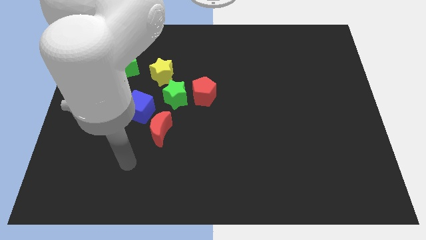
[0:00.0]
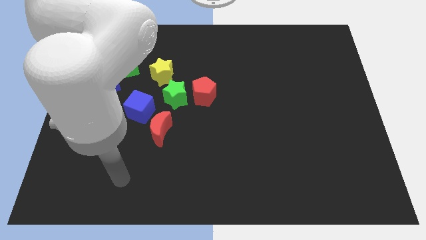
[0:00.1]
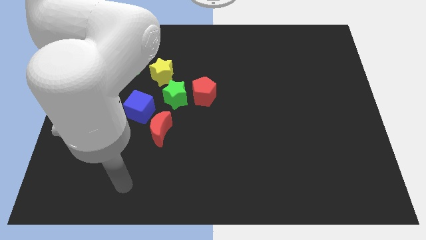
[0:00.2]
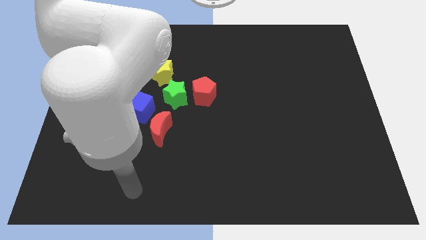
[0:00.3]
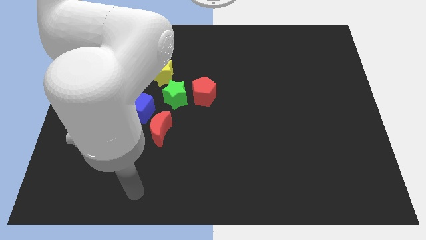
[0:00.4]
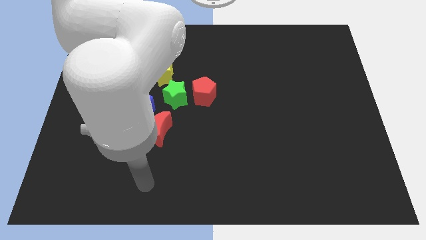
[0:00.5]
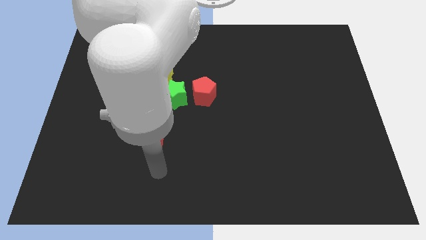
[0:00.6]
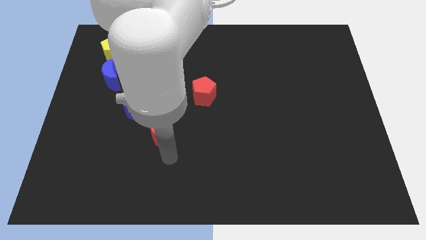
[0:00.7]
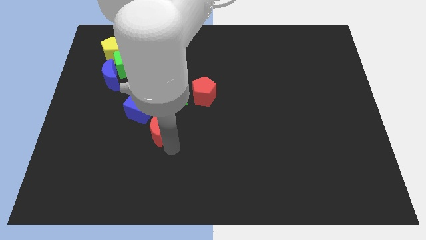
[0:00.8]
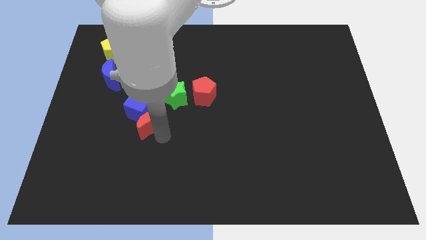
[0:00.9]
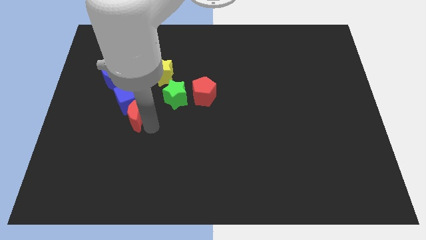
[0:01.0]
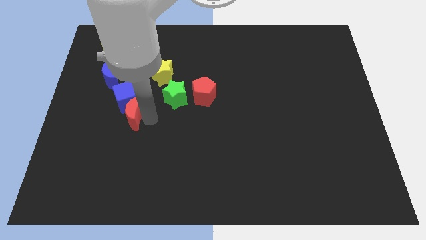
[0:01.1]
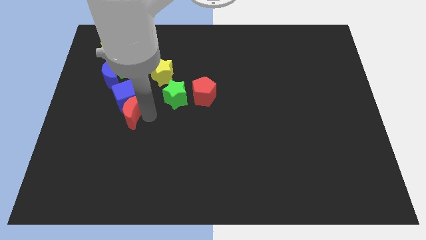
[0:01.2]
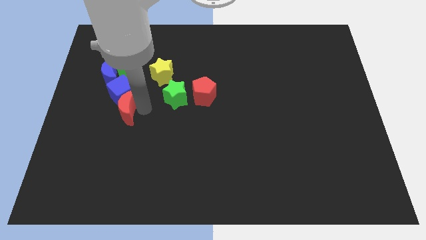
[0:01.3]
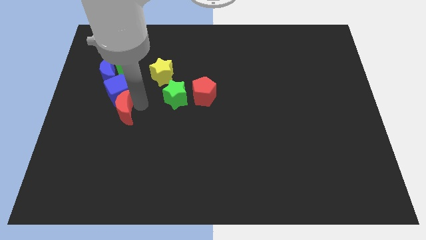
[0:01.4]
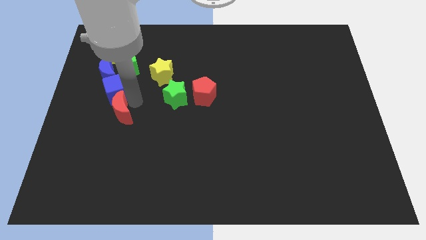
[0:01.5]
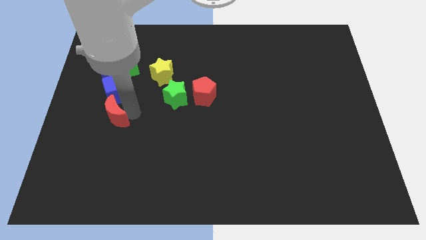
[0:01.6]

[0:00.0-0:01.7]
move the red moon into the blue cube

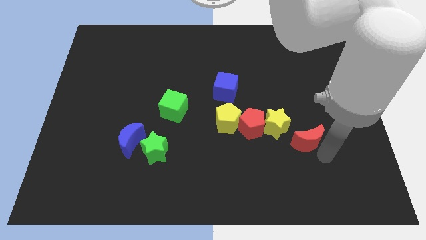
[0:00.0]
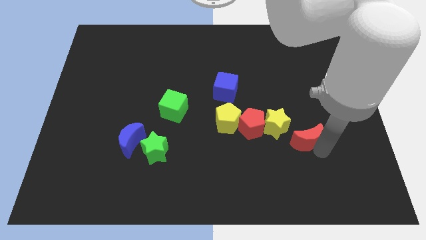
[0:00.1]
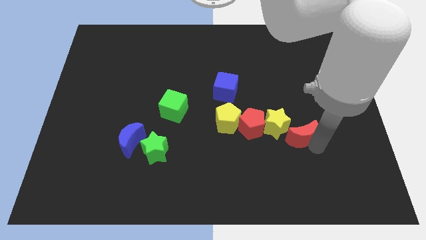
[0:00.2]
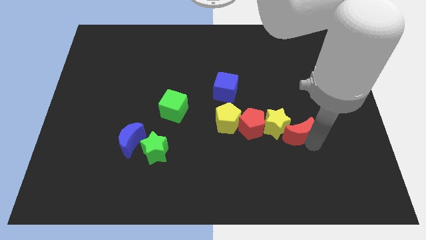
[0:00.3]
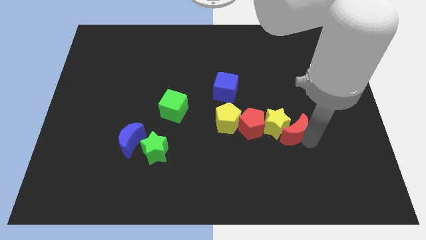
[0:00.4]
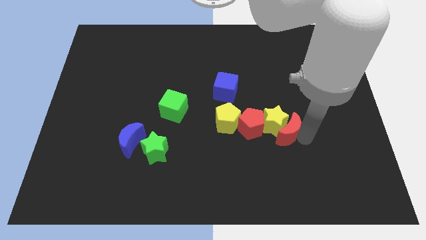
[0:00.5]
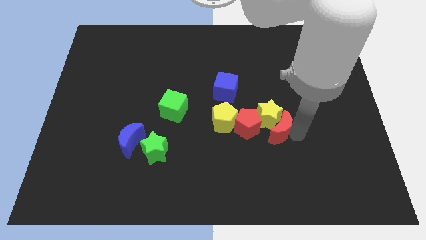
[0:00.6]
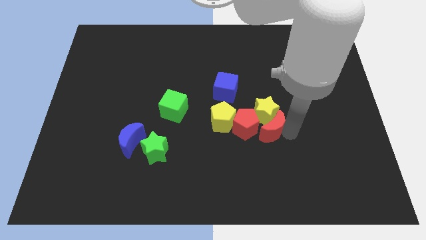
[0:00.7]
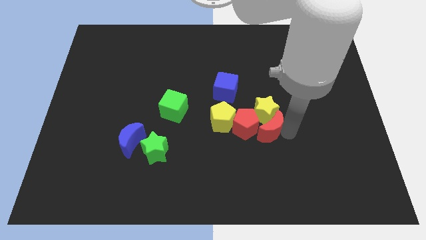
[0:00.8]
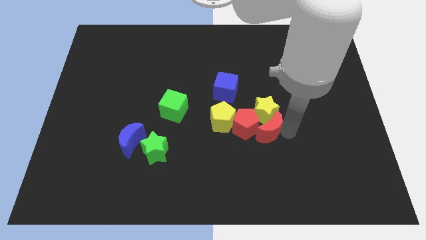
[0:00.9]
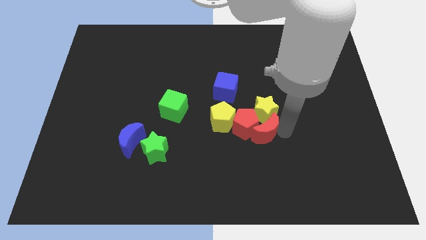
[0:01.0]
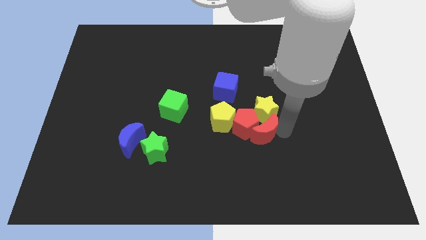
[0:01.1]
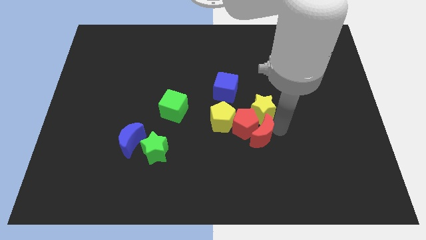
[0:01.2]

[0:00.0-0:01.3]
push the red crescent into the yellow star

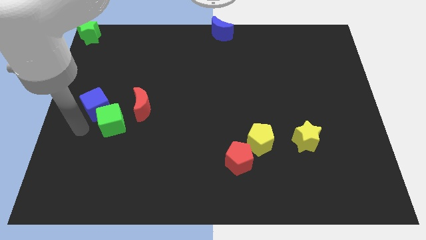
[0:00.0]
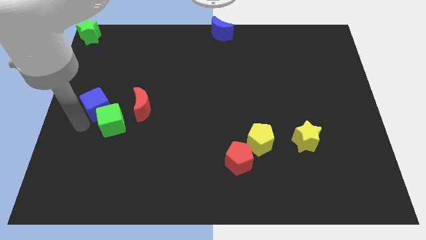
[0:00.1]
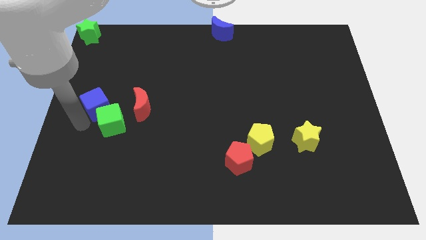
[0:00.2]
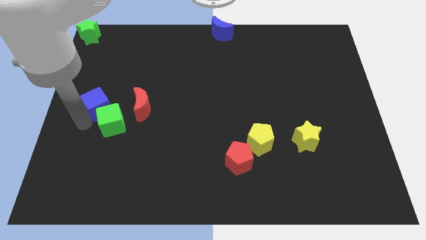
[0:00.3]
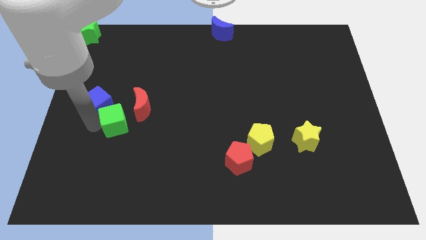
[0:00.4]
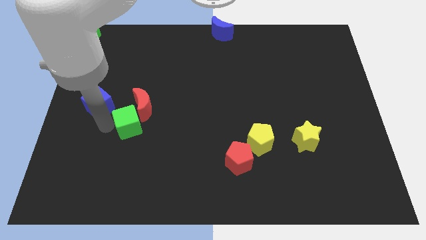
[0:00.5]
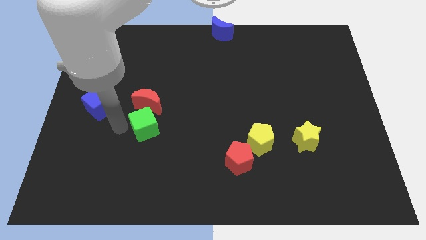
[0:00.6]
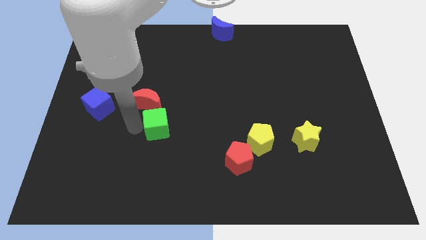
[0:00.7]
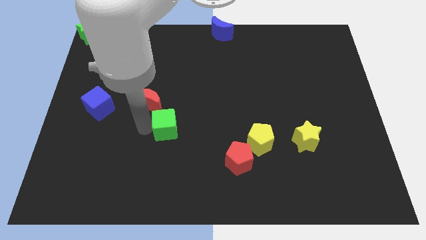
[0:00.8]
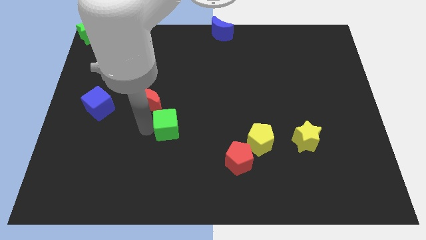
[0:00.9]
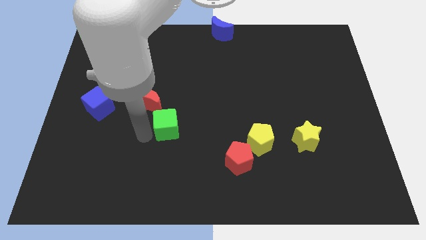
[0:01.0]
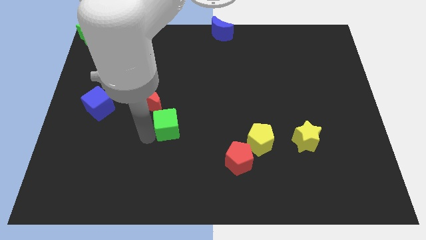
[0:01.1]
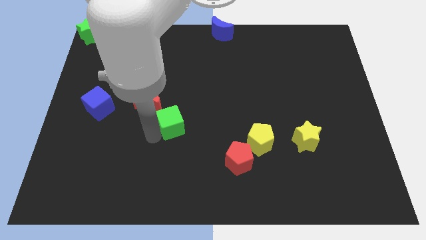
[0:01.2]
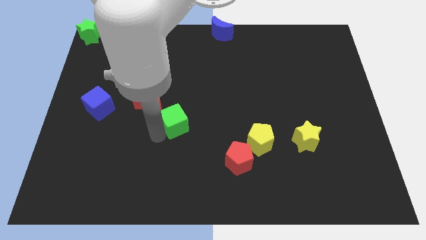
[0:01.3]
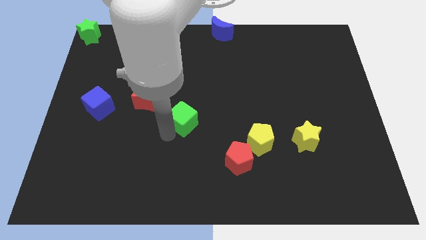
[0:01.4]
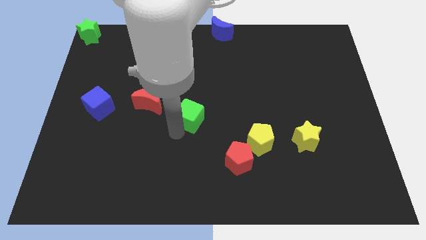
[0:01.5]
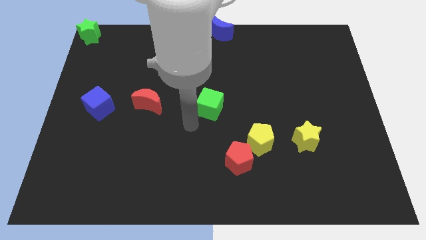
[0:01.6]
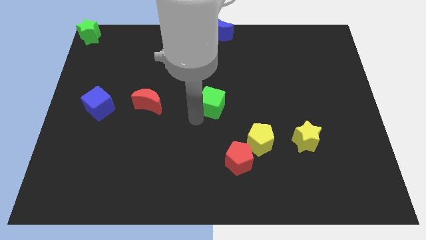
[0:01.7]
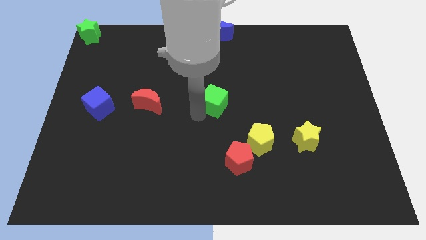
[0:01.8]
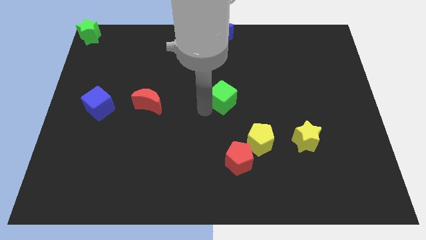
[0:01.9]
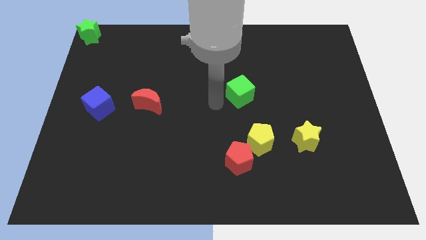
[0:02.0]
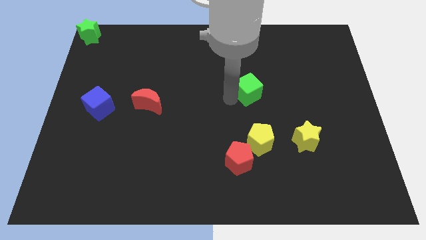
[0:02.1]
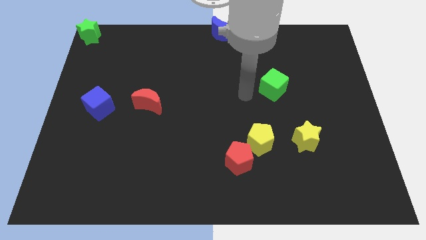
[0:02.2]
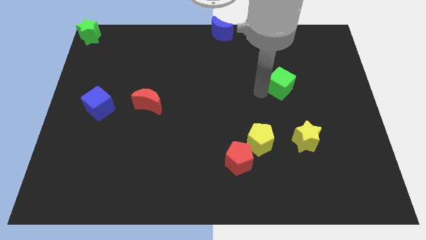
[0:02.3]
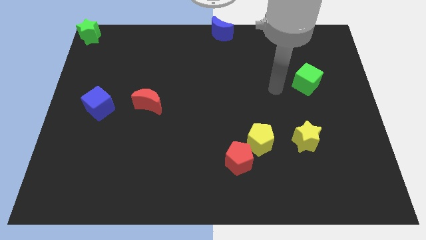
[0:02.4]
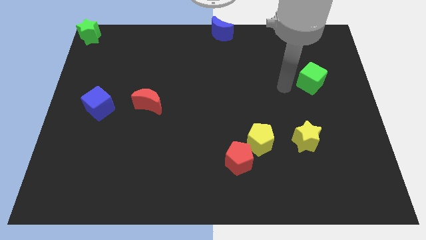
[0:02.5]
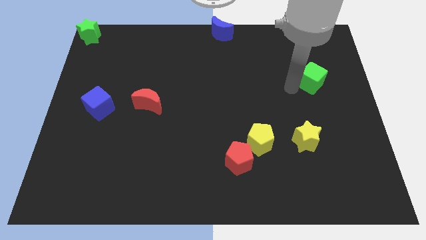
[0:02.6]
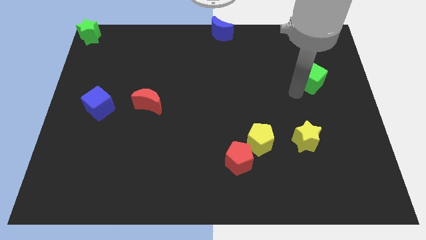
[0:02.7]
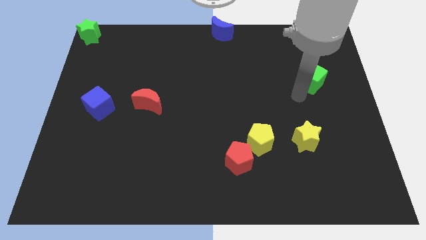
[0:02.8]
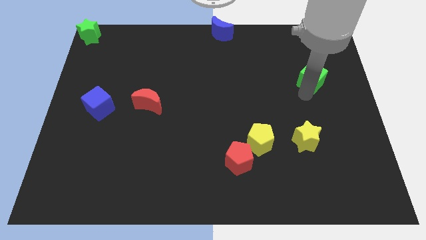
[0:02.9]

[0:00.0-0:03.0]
push the green cube towards top right corner of the board

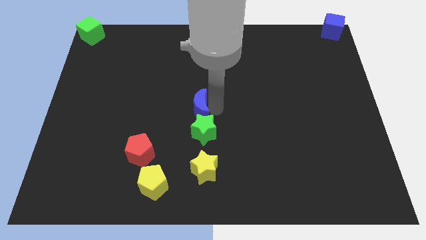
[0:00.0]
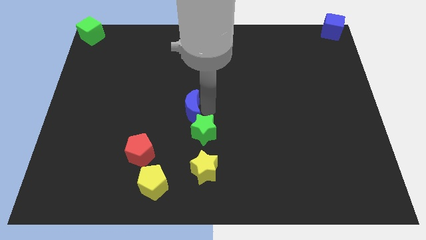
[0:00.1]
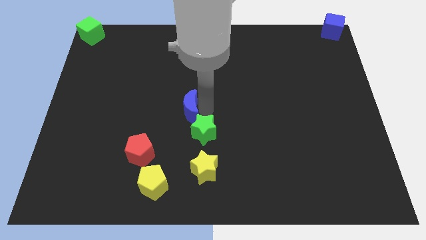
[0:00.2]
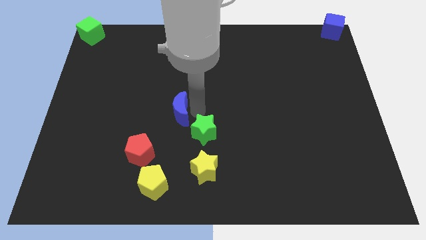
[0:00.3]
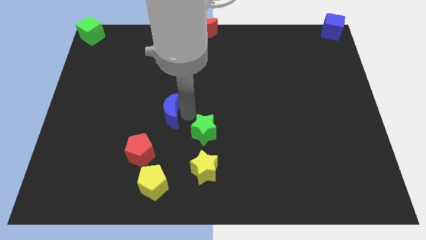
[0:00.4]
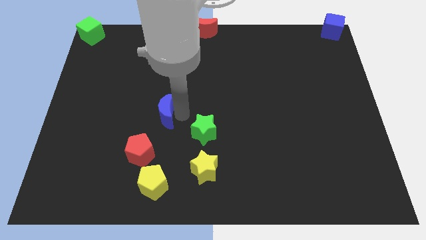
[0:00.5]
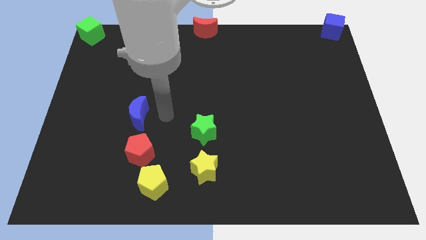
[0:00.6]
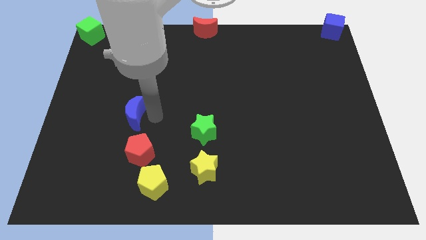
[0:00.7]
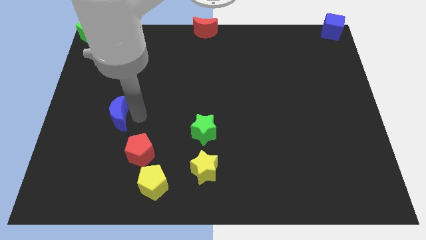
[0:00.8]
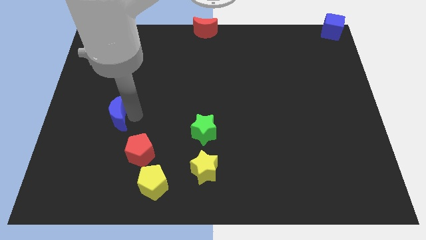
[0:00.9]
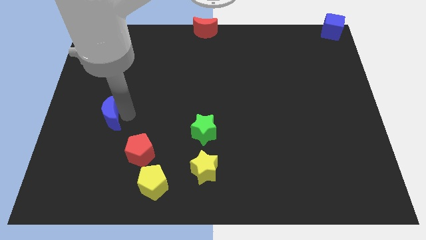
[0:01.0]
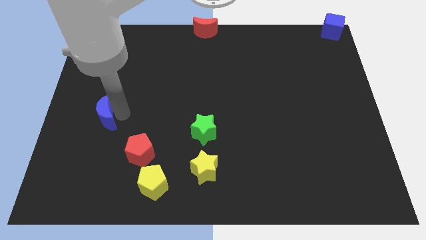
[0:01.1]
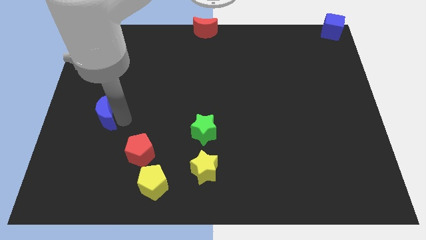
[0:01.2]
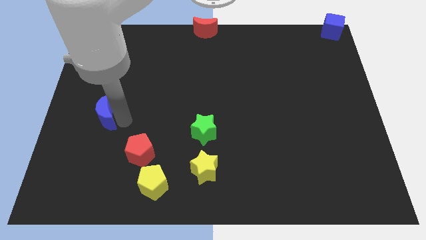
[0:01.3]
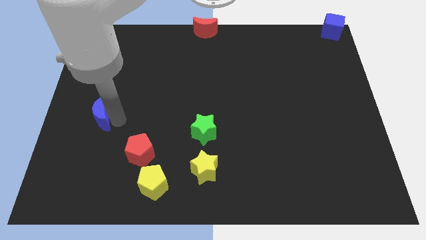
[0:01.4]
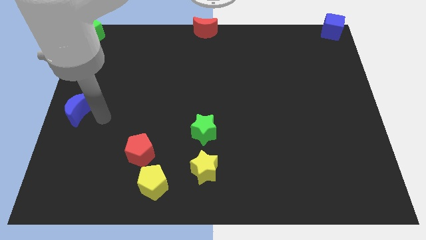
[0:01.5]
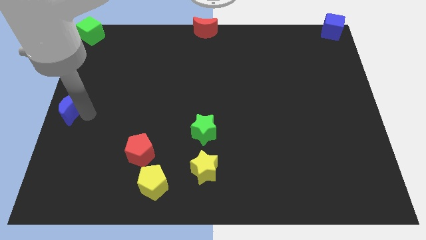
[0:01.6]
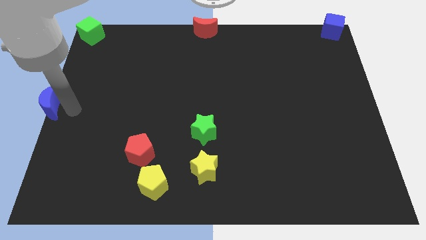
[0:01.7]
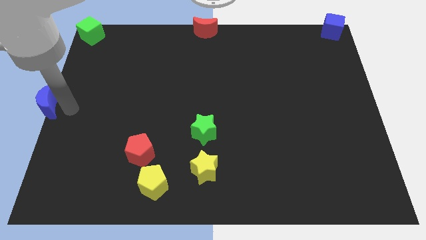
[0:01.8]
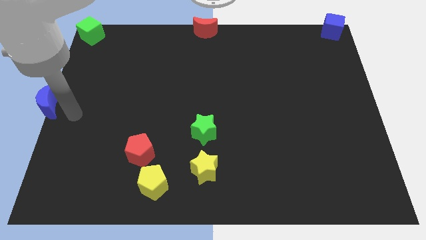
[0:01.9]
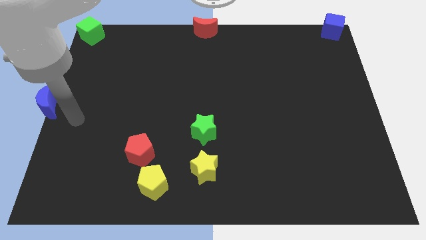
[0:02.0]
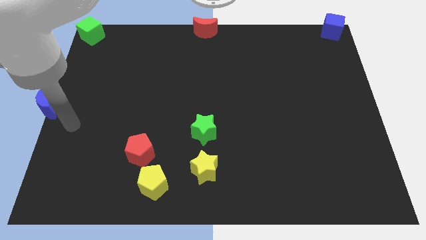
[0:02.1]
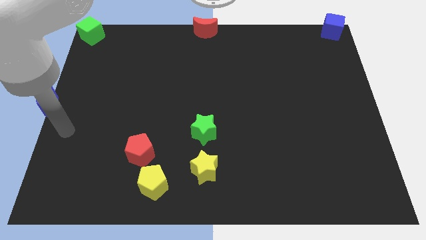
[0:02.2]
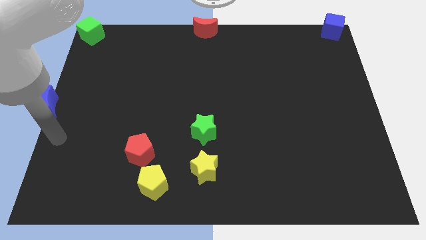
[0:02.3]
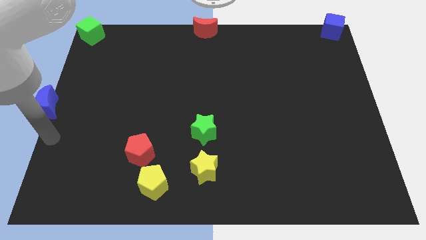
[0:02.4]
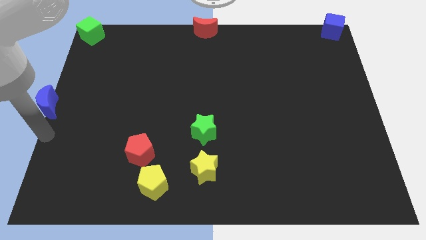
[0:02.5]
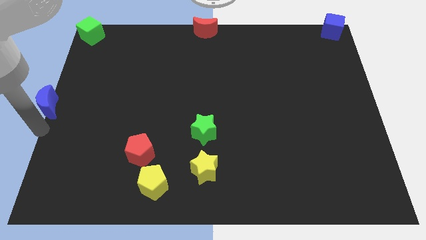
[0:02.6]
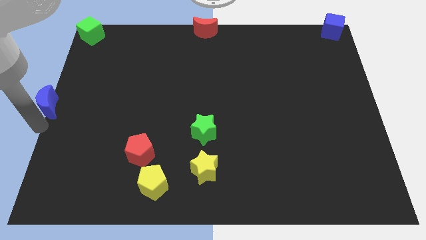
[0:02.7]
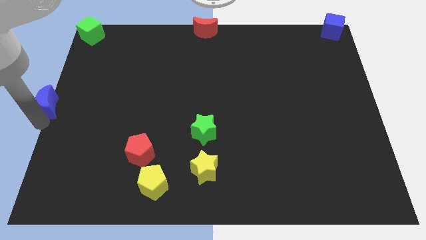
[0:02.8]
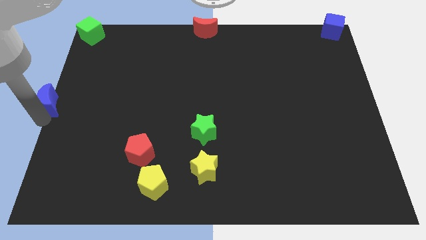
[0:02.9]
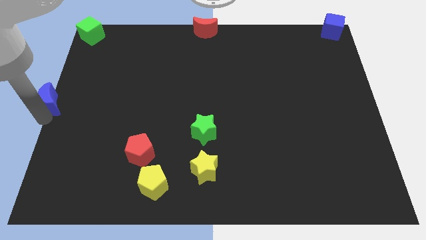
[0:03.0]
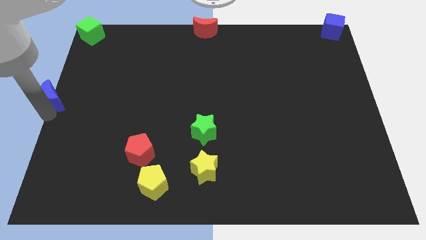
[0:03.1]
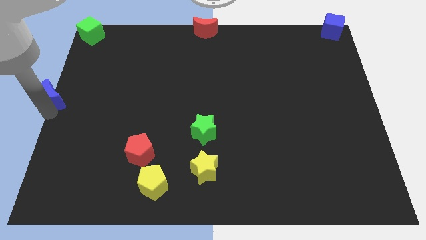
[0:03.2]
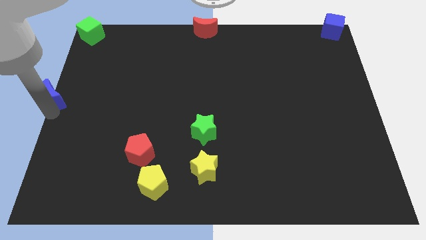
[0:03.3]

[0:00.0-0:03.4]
put the blue moon at the center left corner
